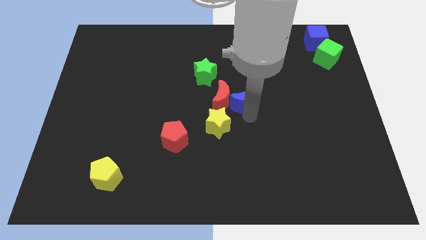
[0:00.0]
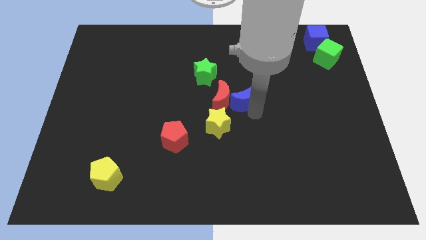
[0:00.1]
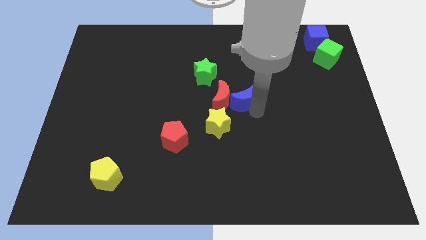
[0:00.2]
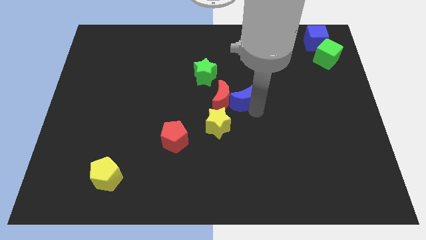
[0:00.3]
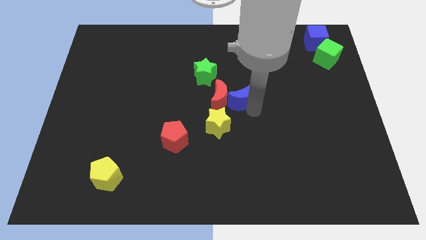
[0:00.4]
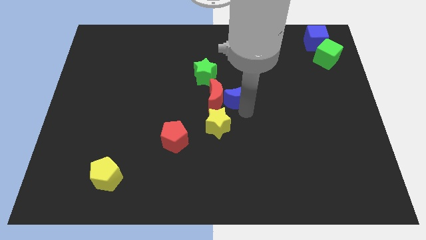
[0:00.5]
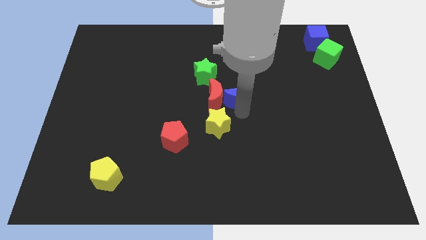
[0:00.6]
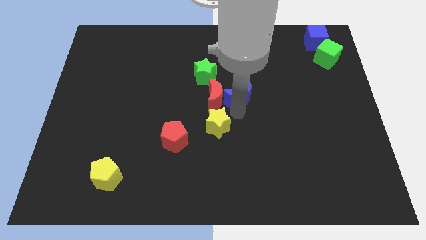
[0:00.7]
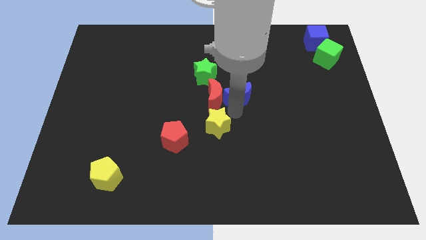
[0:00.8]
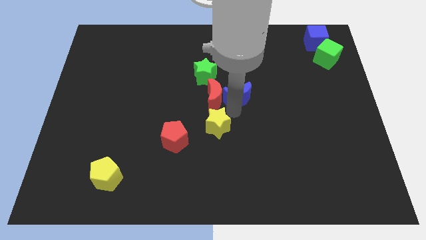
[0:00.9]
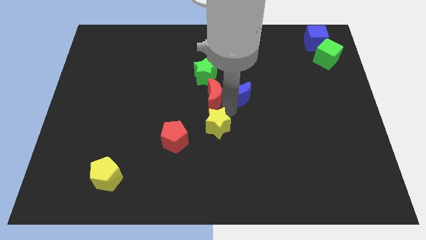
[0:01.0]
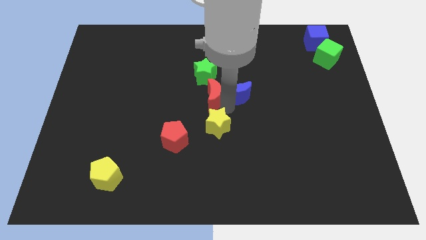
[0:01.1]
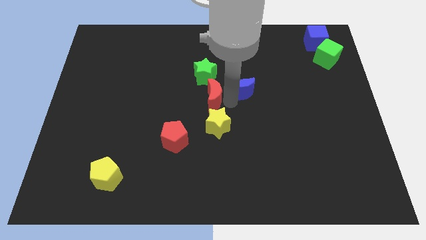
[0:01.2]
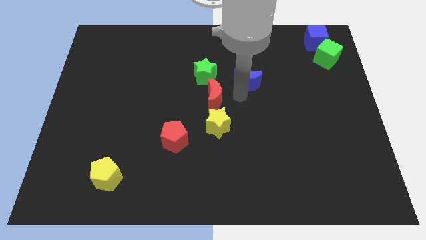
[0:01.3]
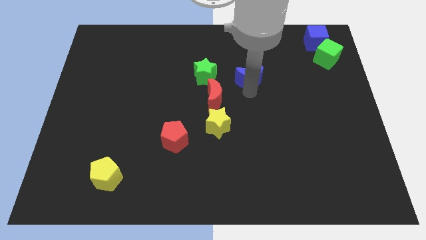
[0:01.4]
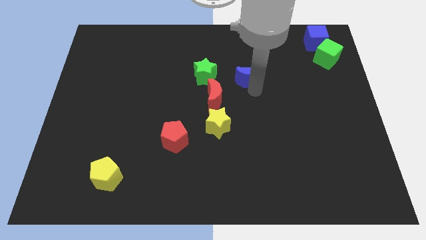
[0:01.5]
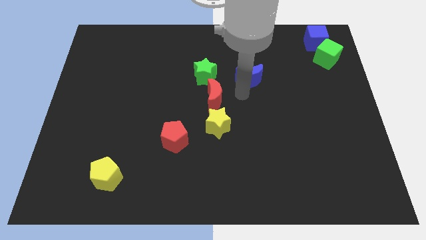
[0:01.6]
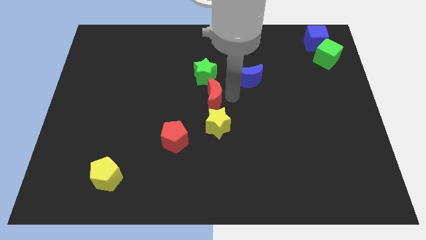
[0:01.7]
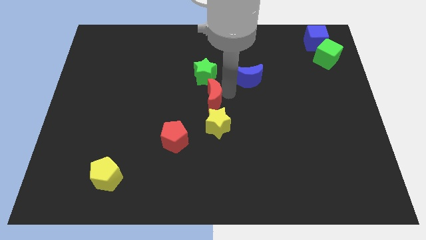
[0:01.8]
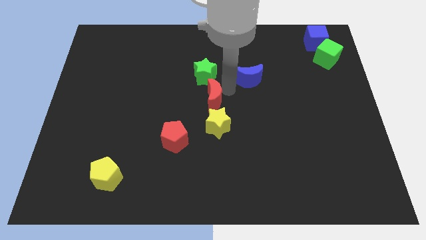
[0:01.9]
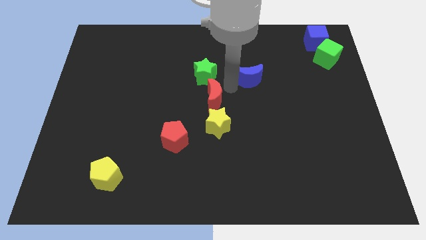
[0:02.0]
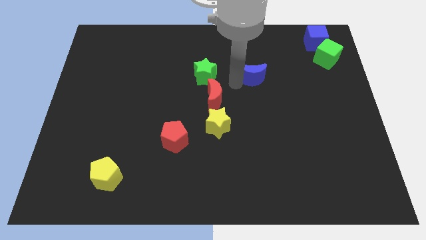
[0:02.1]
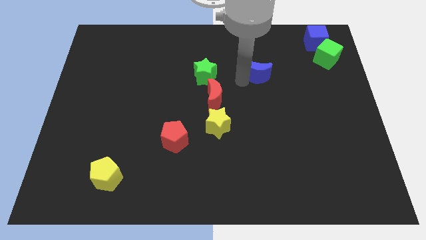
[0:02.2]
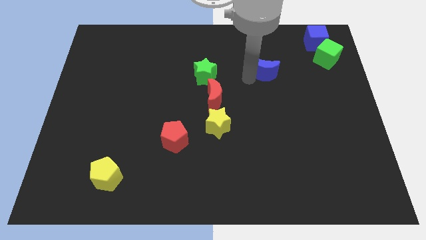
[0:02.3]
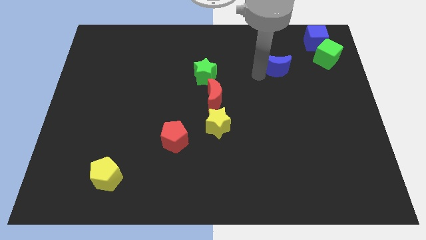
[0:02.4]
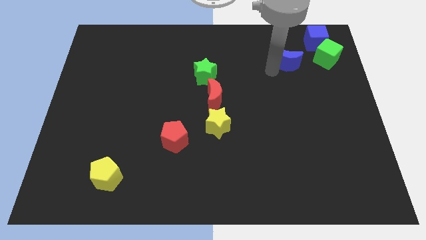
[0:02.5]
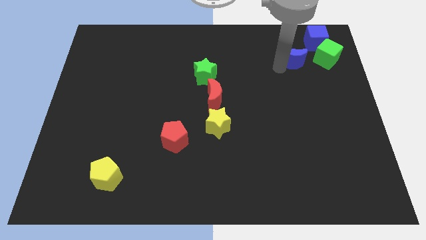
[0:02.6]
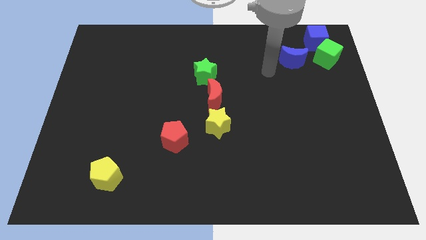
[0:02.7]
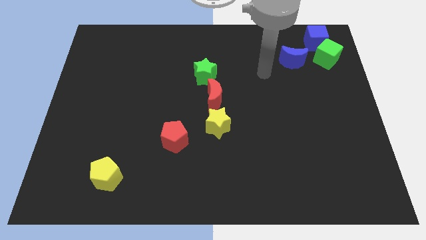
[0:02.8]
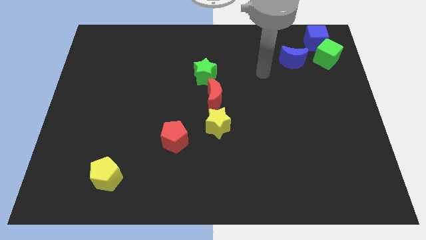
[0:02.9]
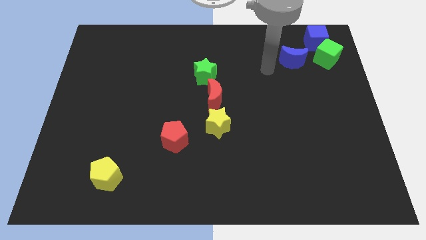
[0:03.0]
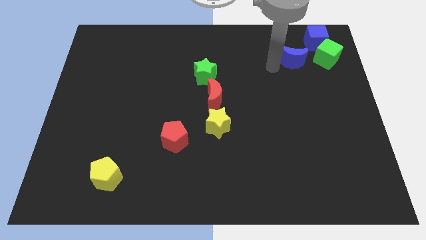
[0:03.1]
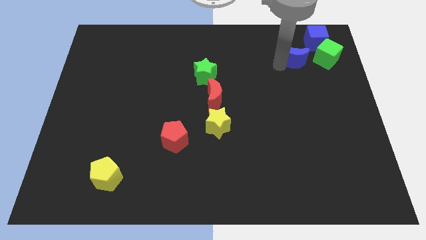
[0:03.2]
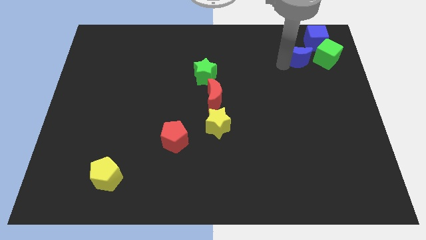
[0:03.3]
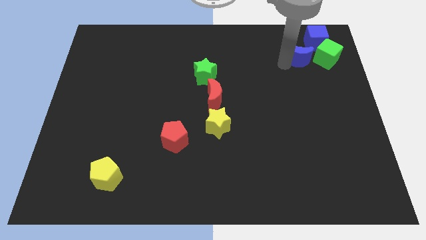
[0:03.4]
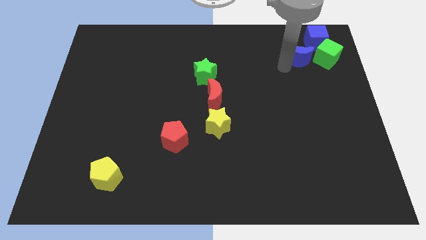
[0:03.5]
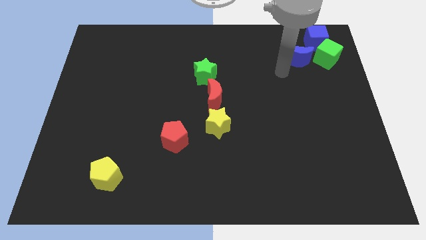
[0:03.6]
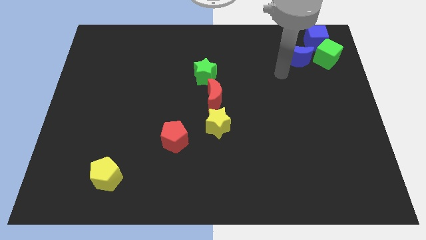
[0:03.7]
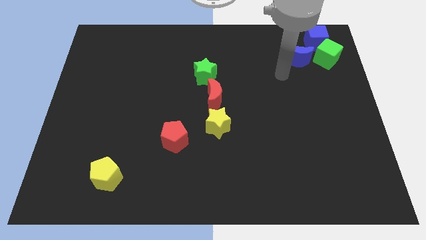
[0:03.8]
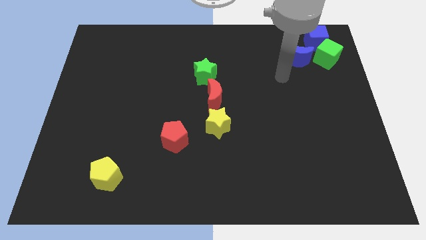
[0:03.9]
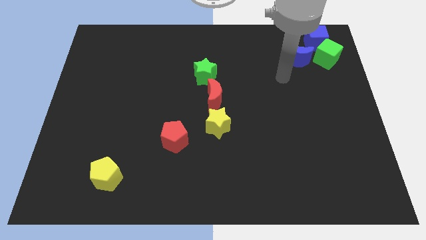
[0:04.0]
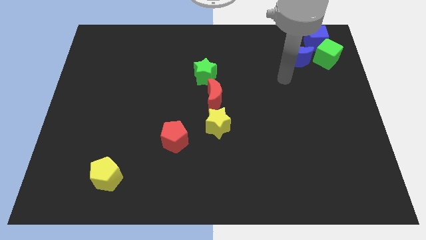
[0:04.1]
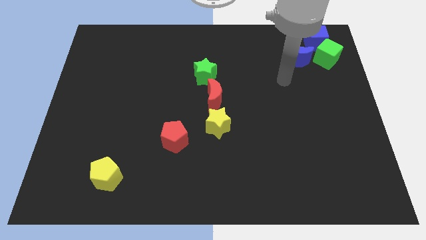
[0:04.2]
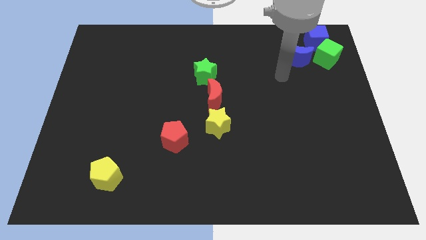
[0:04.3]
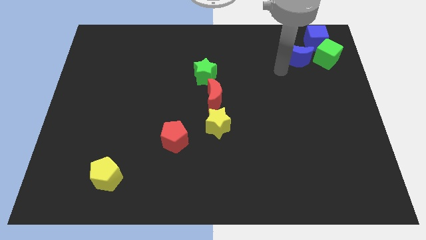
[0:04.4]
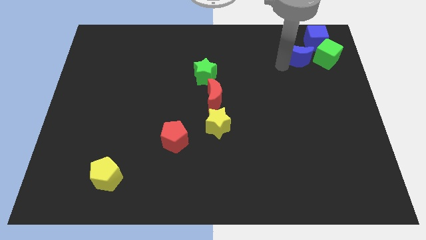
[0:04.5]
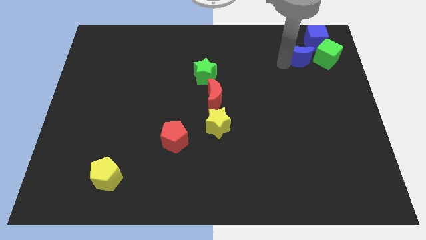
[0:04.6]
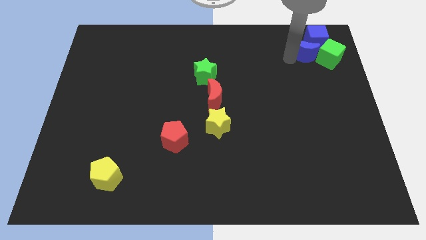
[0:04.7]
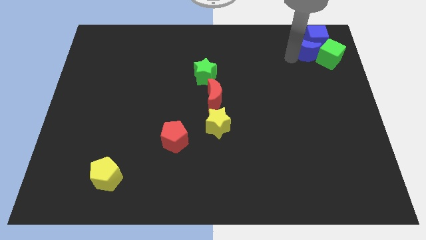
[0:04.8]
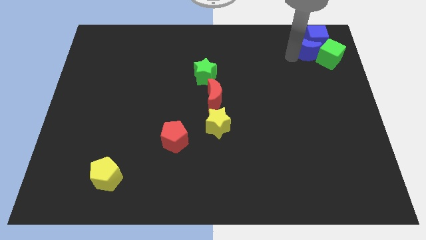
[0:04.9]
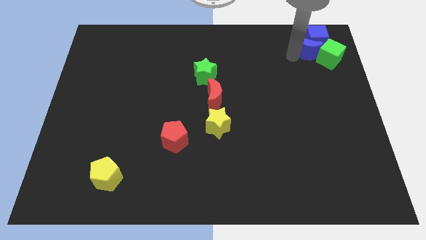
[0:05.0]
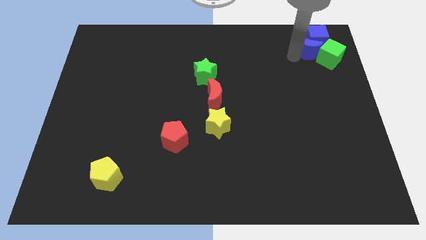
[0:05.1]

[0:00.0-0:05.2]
move the blue crescent close to the blue cube

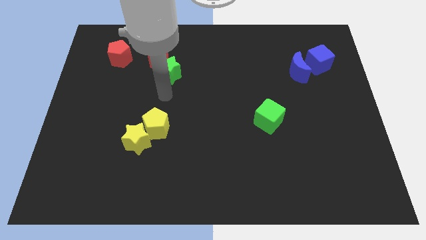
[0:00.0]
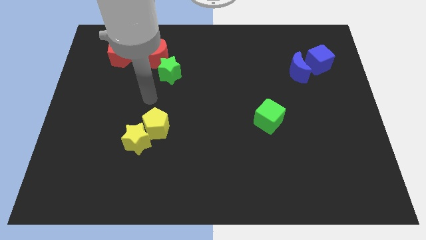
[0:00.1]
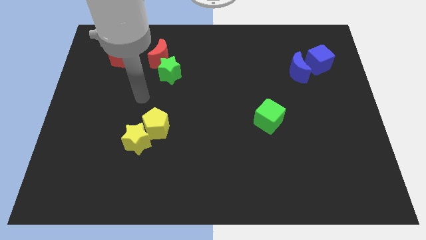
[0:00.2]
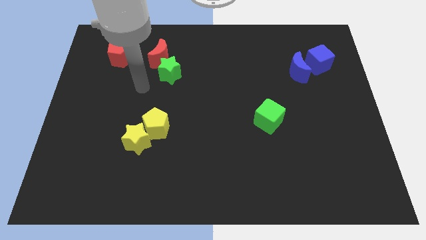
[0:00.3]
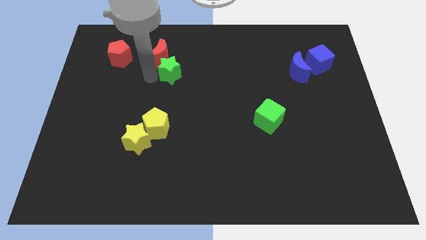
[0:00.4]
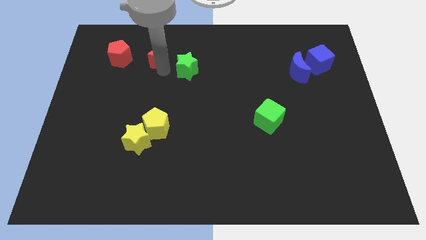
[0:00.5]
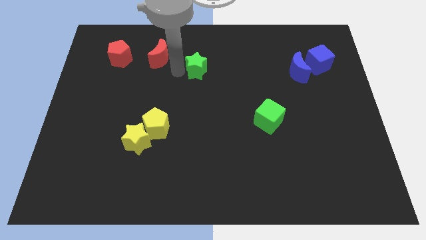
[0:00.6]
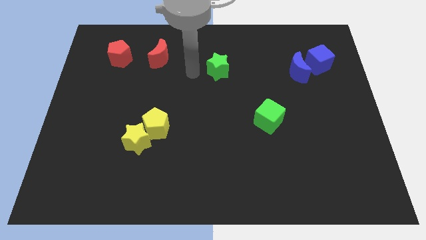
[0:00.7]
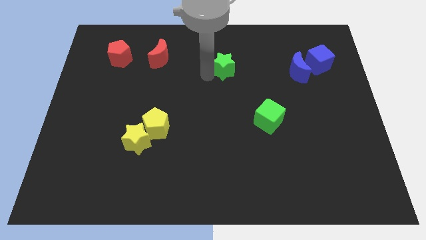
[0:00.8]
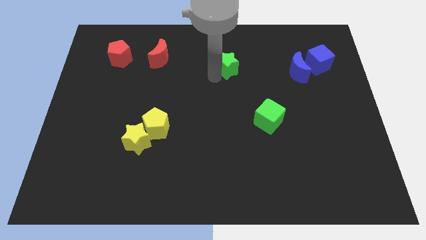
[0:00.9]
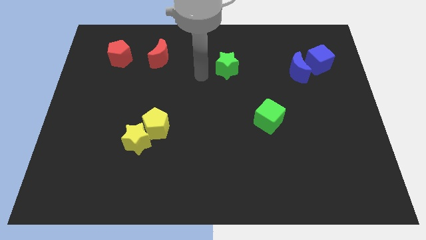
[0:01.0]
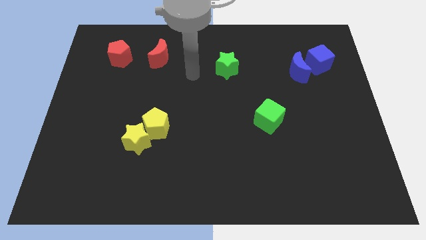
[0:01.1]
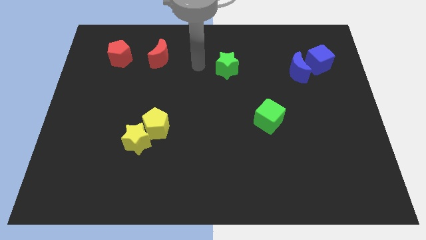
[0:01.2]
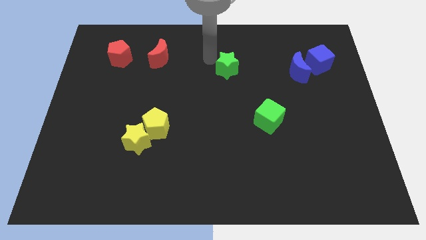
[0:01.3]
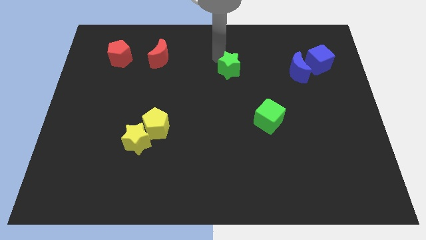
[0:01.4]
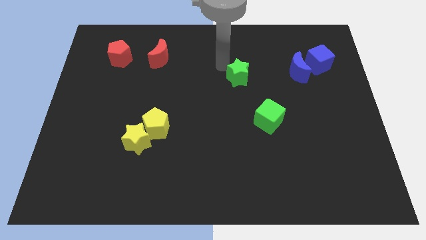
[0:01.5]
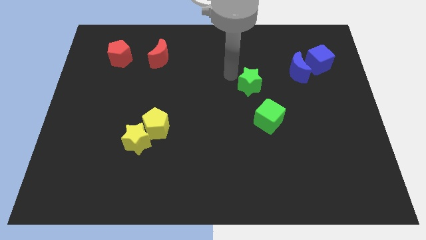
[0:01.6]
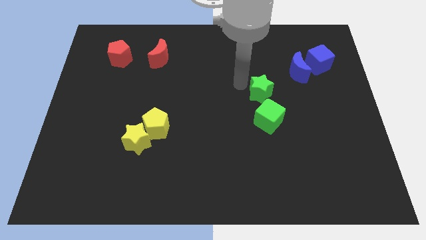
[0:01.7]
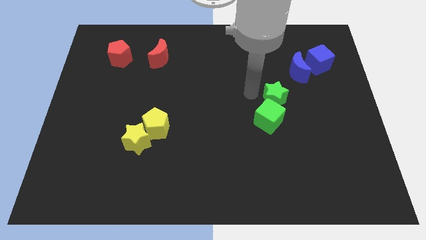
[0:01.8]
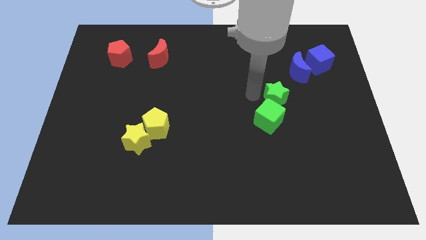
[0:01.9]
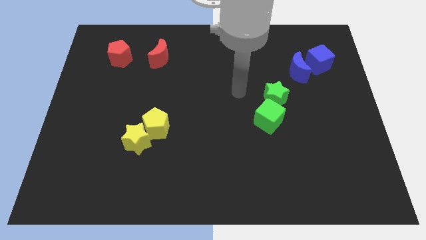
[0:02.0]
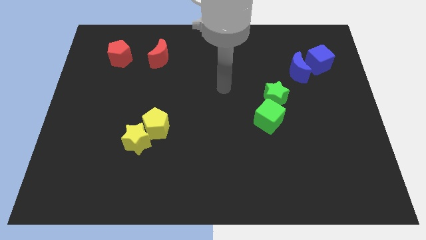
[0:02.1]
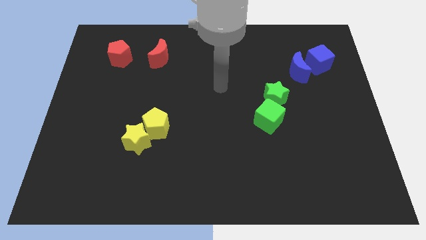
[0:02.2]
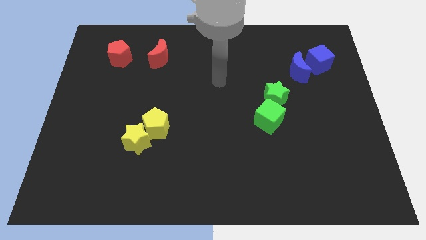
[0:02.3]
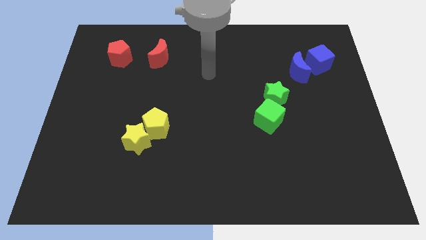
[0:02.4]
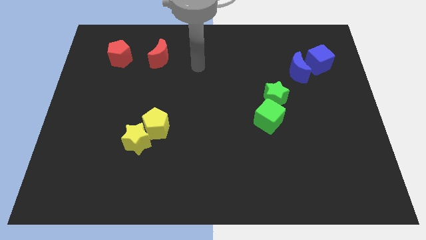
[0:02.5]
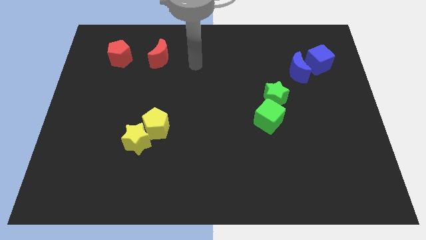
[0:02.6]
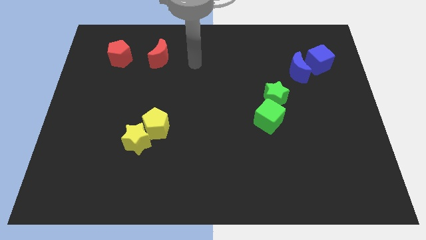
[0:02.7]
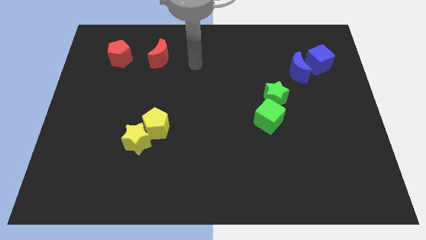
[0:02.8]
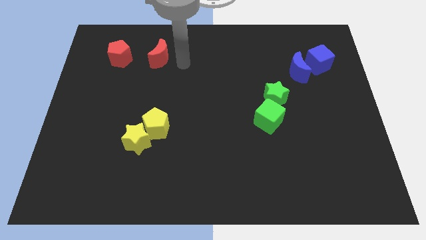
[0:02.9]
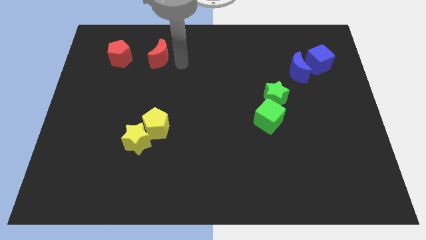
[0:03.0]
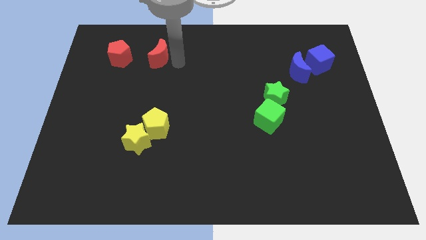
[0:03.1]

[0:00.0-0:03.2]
separate the green star from the red crescent

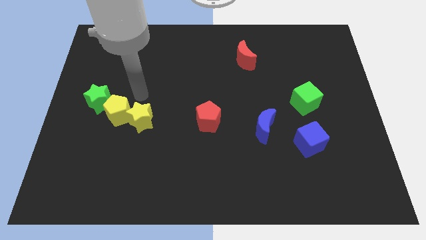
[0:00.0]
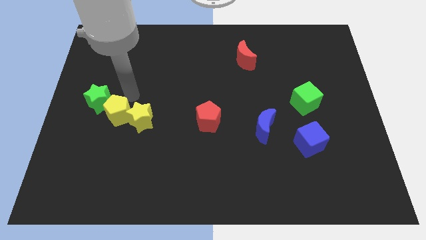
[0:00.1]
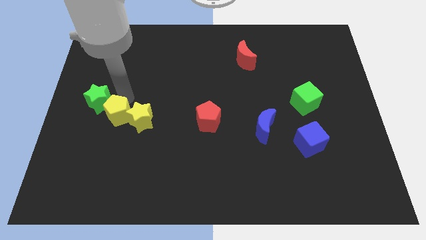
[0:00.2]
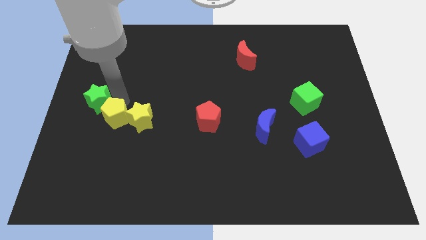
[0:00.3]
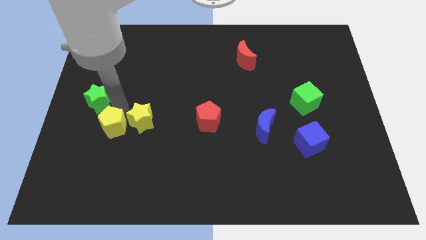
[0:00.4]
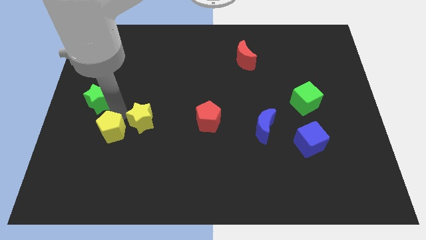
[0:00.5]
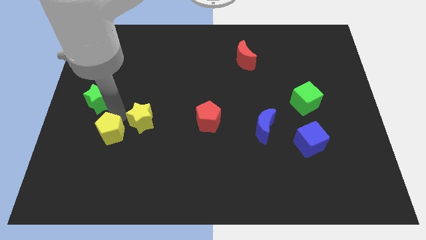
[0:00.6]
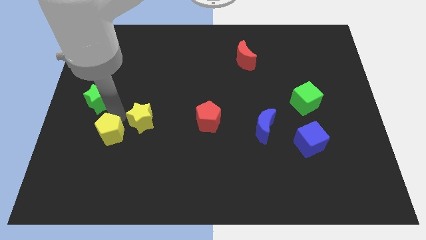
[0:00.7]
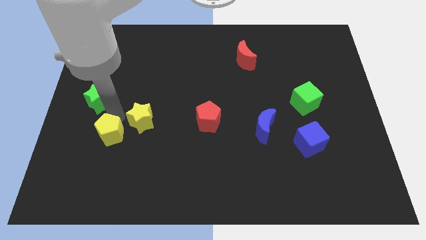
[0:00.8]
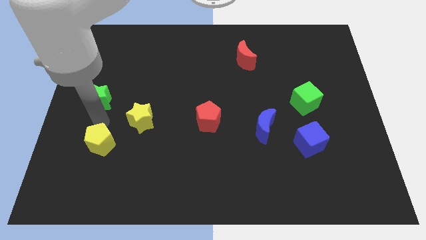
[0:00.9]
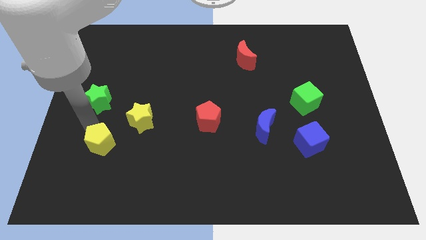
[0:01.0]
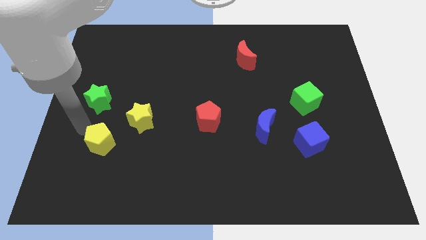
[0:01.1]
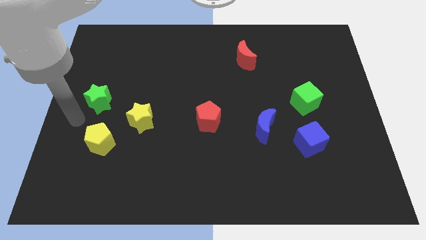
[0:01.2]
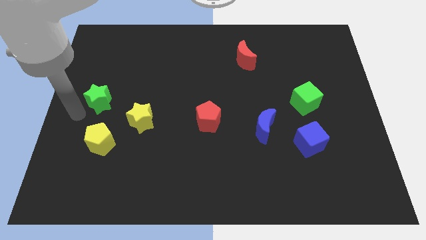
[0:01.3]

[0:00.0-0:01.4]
put the yellow pentagon diagonally to yellow star
